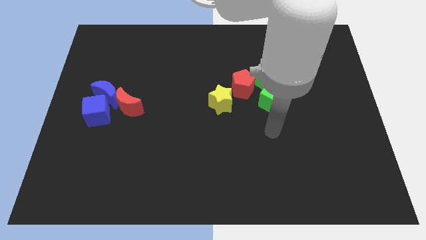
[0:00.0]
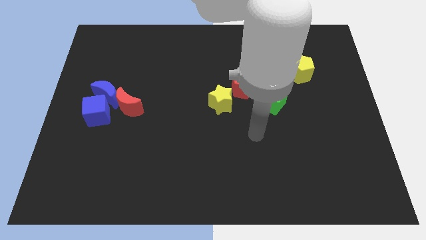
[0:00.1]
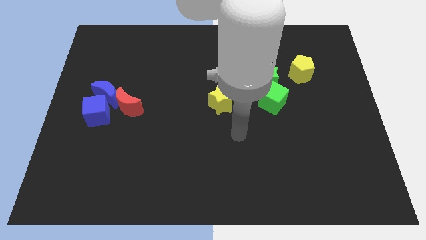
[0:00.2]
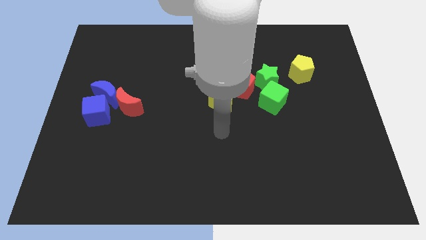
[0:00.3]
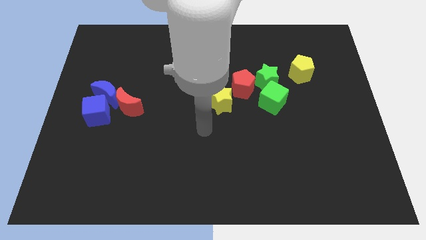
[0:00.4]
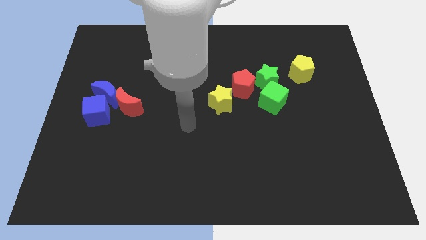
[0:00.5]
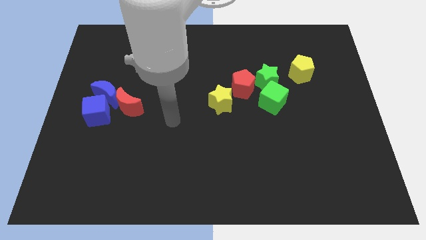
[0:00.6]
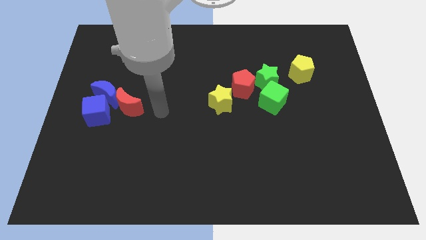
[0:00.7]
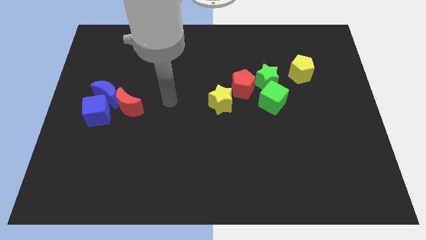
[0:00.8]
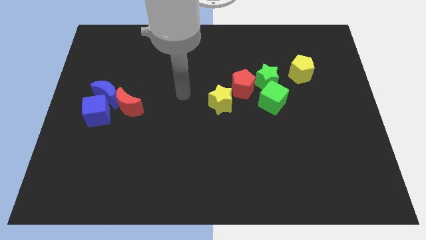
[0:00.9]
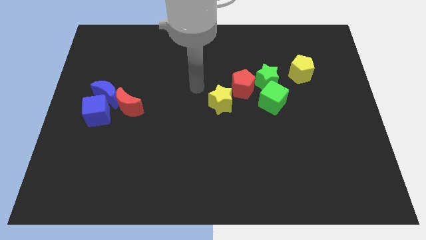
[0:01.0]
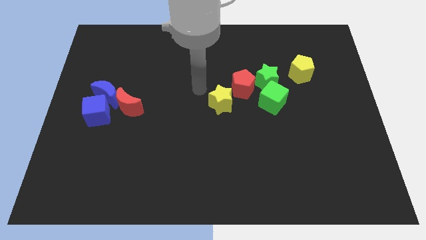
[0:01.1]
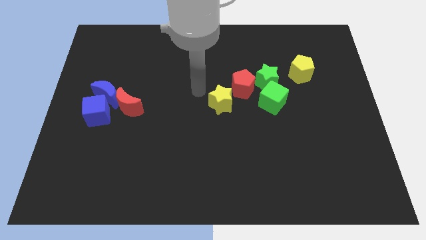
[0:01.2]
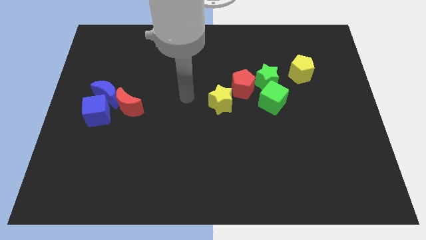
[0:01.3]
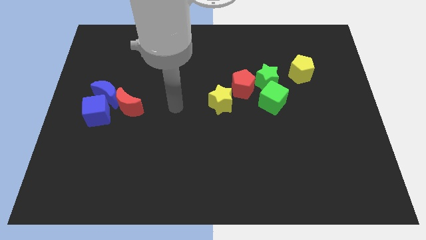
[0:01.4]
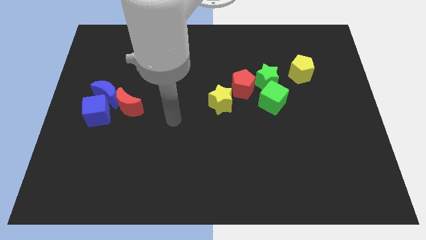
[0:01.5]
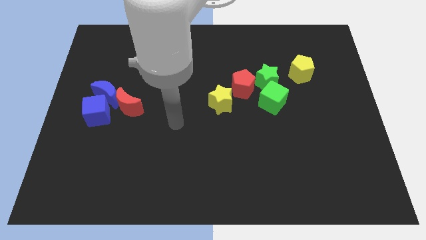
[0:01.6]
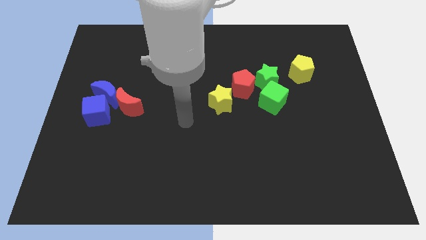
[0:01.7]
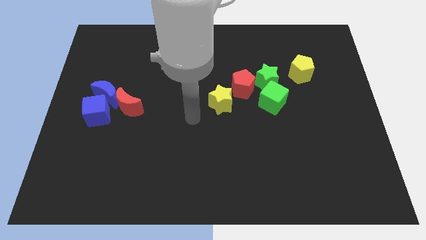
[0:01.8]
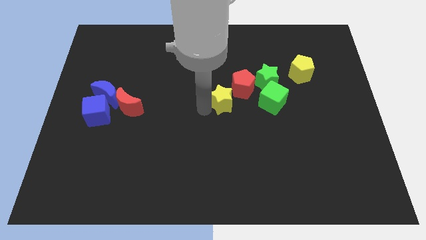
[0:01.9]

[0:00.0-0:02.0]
point the arm to the left of the yellow star

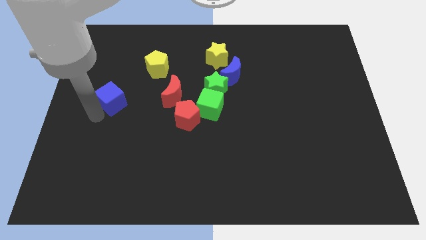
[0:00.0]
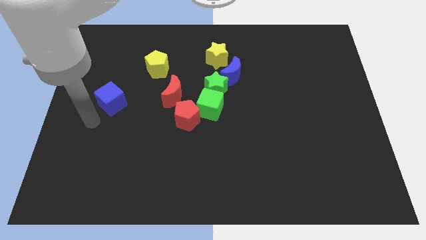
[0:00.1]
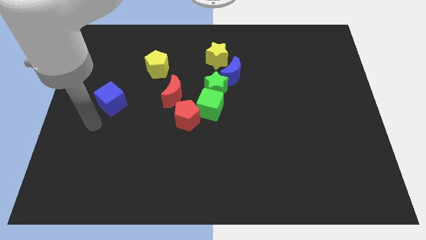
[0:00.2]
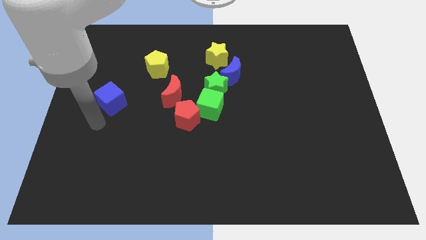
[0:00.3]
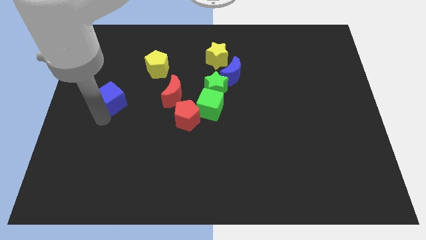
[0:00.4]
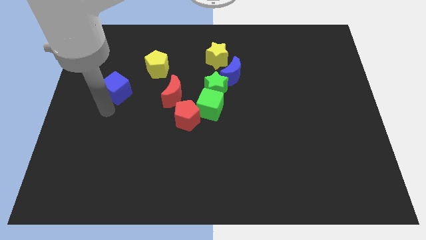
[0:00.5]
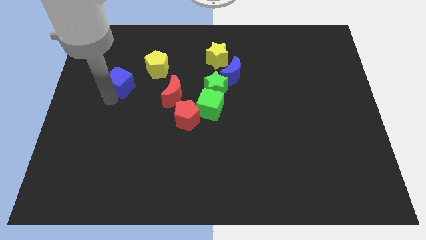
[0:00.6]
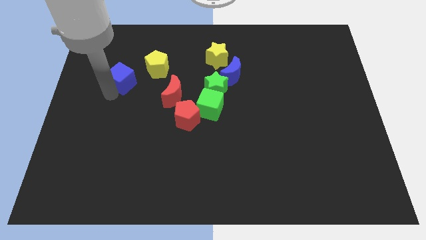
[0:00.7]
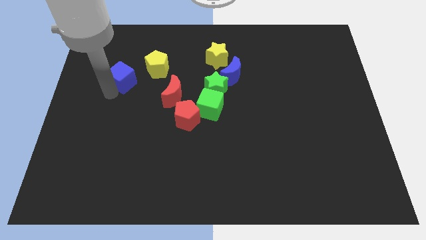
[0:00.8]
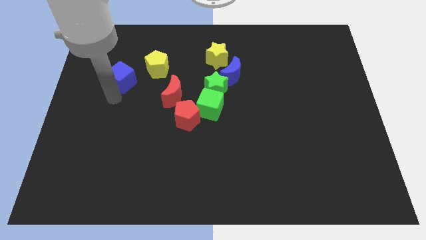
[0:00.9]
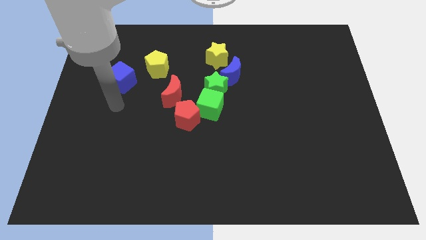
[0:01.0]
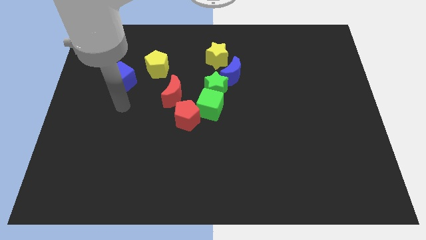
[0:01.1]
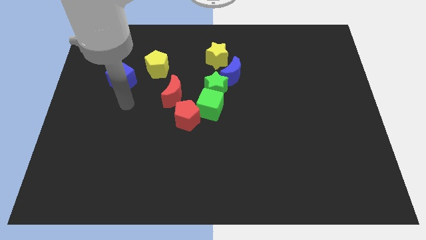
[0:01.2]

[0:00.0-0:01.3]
place the blue cube to the left of yellow pentagon

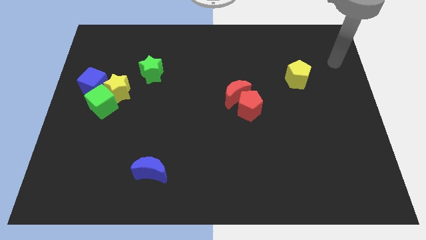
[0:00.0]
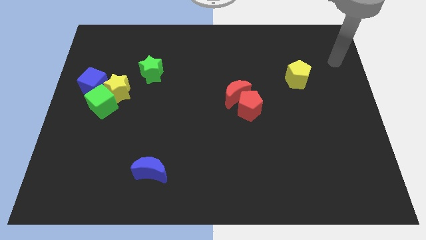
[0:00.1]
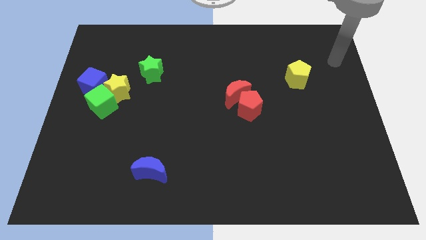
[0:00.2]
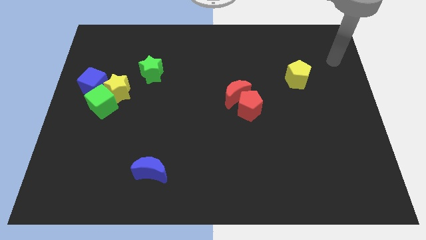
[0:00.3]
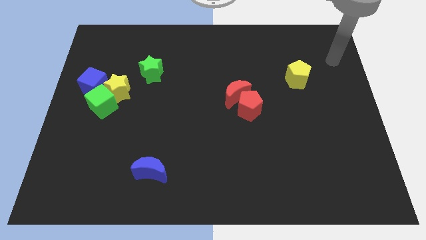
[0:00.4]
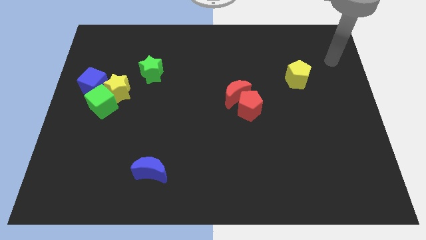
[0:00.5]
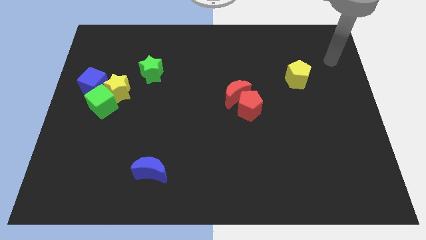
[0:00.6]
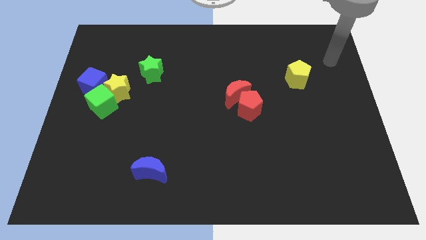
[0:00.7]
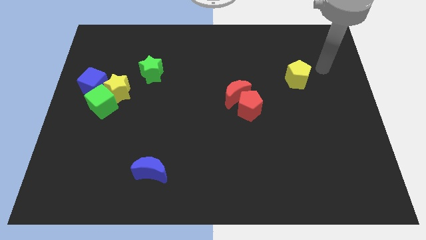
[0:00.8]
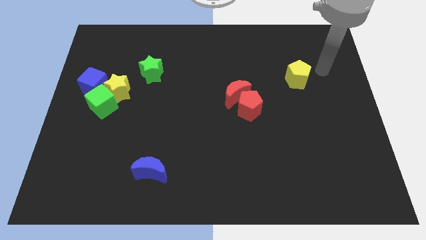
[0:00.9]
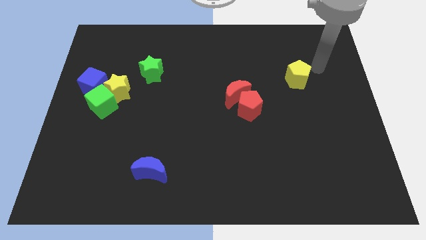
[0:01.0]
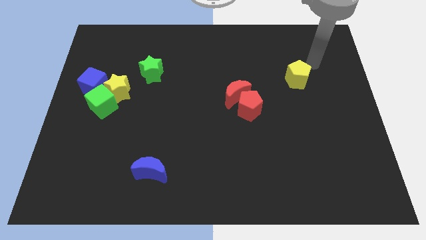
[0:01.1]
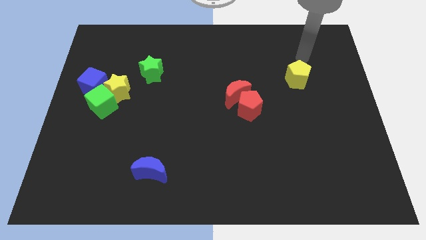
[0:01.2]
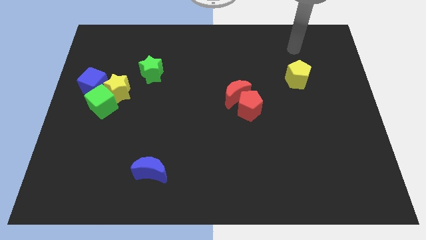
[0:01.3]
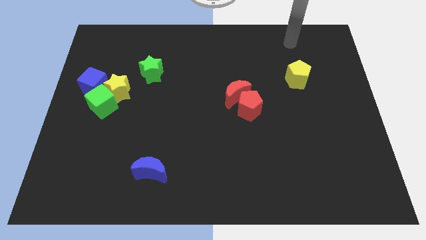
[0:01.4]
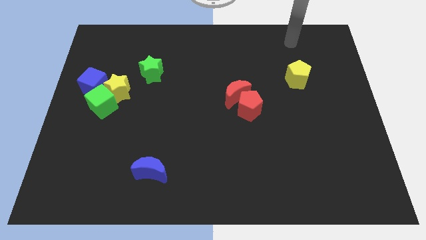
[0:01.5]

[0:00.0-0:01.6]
push your hand above the yellow pentagon

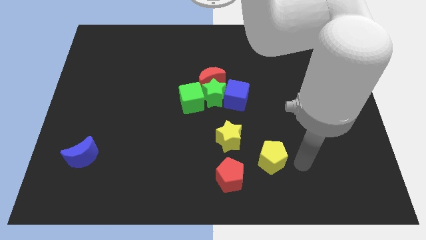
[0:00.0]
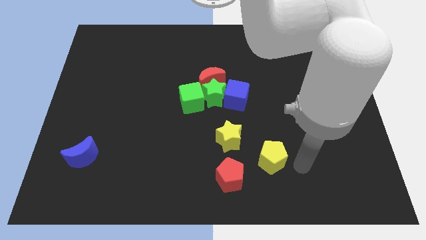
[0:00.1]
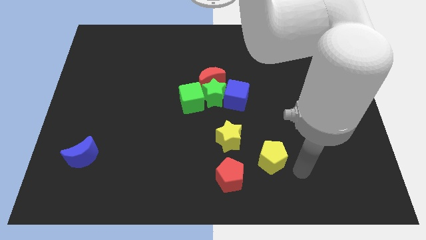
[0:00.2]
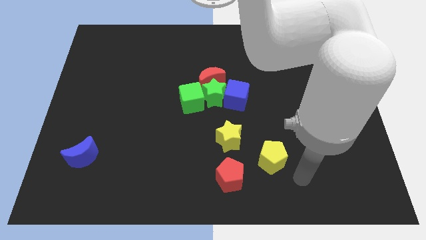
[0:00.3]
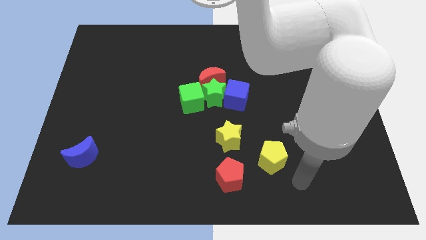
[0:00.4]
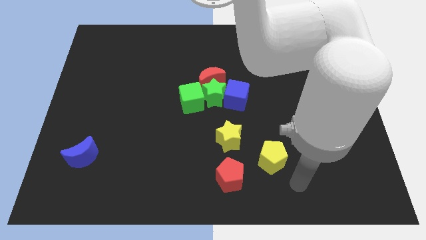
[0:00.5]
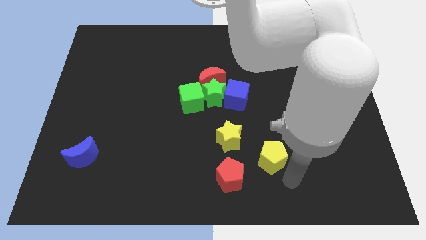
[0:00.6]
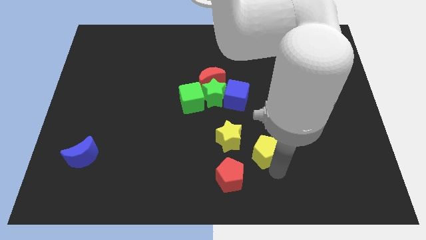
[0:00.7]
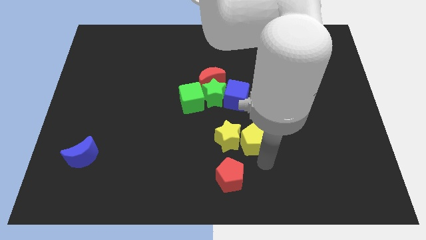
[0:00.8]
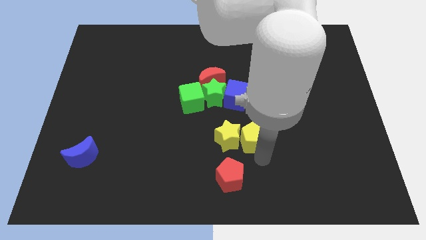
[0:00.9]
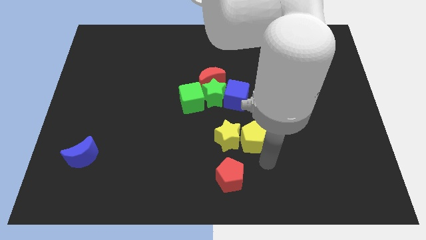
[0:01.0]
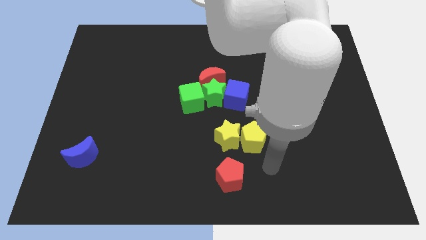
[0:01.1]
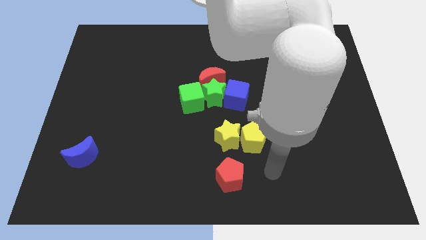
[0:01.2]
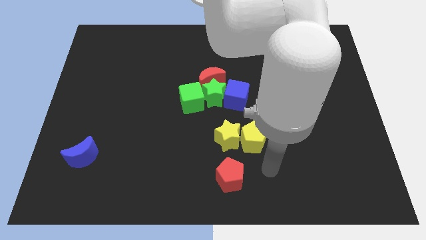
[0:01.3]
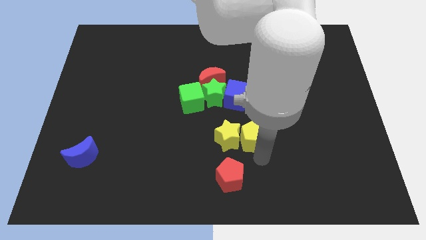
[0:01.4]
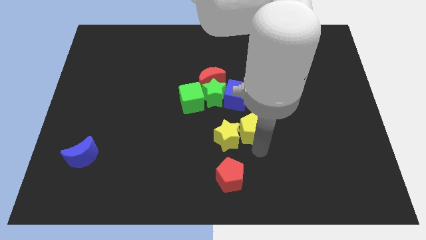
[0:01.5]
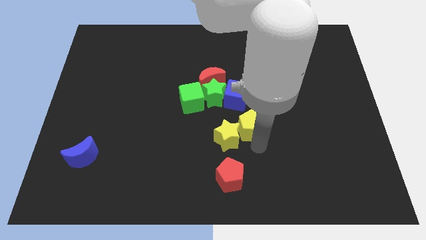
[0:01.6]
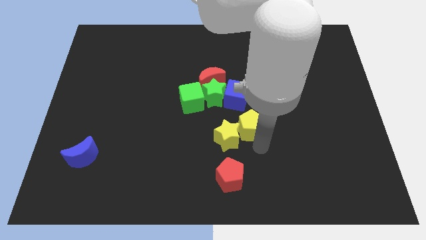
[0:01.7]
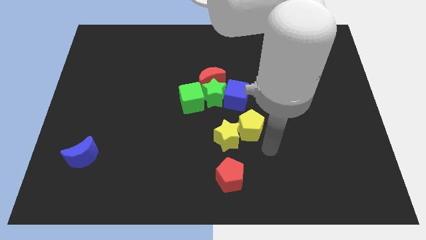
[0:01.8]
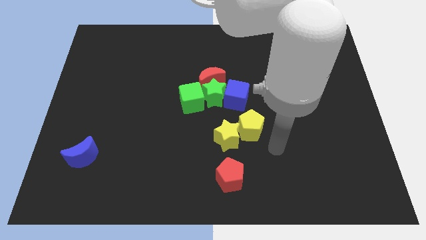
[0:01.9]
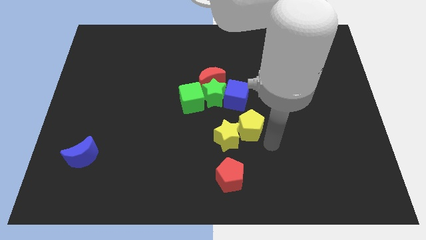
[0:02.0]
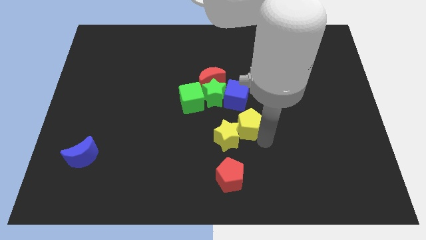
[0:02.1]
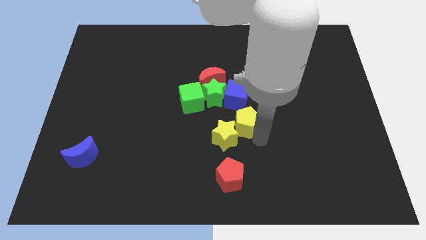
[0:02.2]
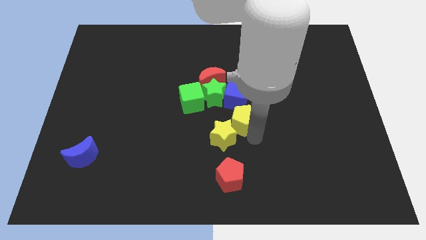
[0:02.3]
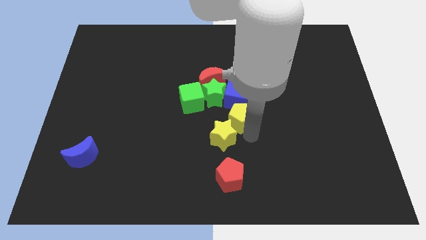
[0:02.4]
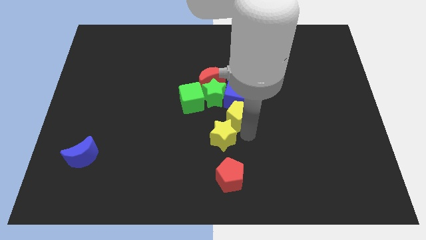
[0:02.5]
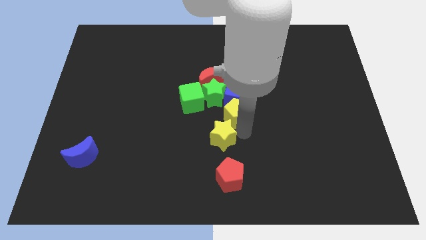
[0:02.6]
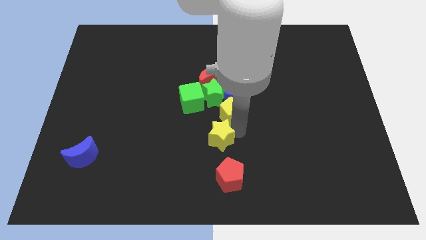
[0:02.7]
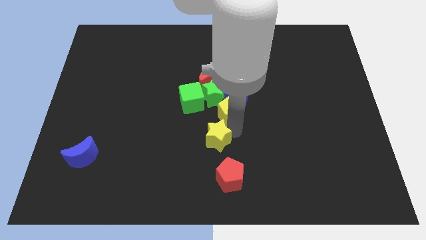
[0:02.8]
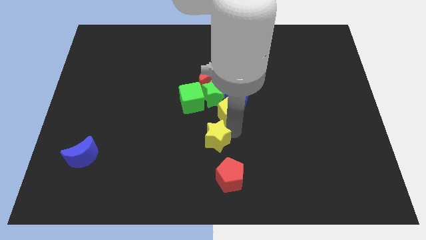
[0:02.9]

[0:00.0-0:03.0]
place the yellow pentagon diagonal to the yellow star

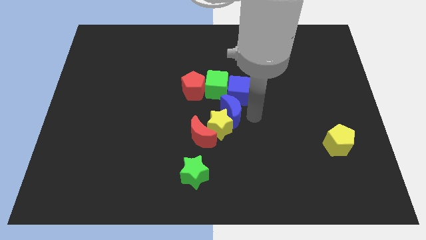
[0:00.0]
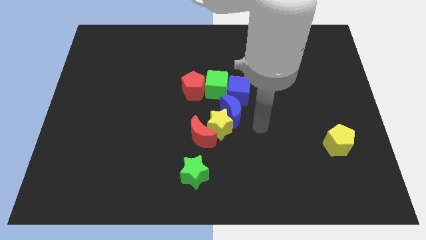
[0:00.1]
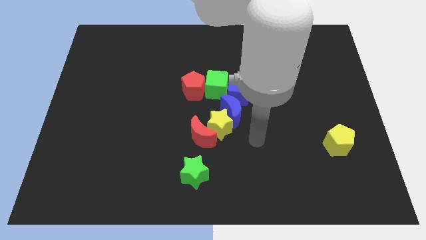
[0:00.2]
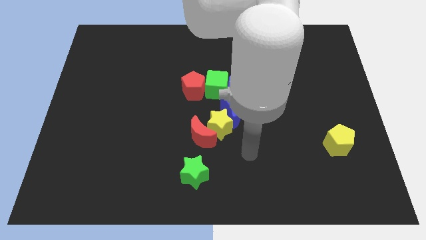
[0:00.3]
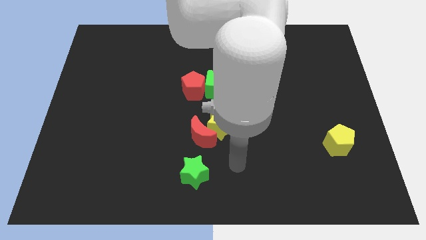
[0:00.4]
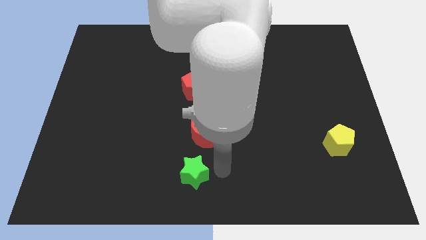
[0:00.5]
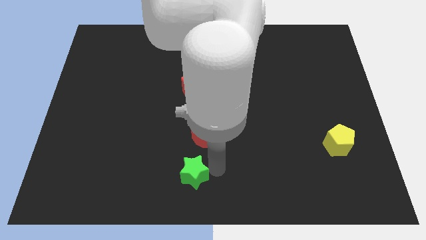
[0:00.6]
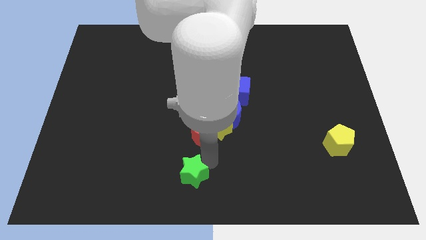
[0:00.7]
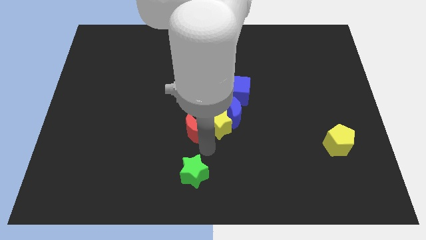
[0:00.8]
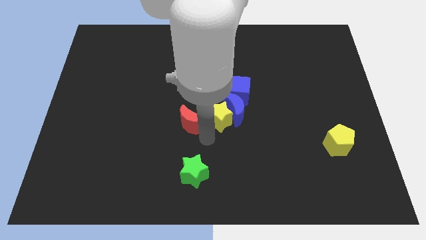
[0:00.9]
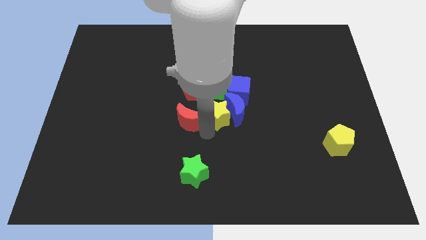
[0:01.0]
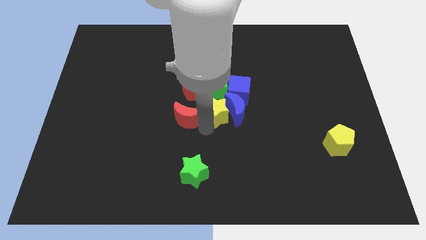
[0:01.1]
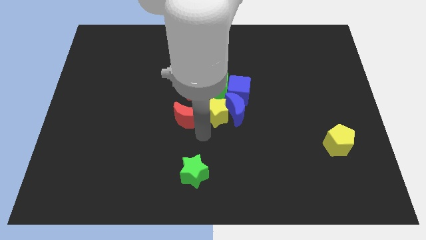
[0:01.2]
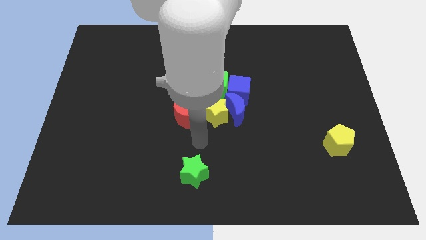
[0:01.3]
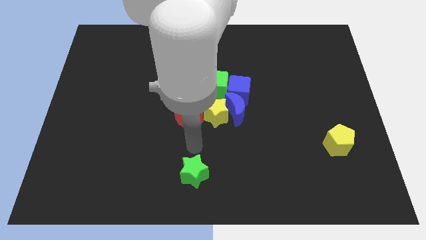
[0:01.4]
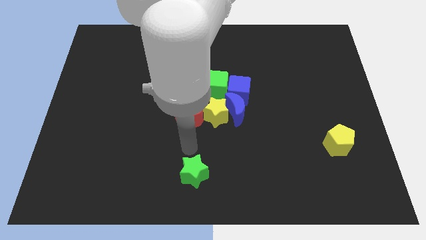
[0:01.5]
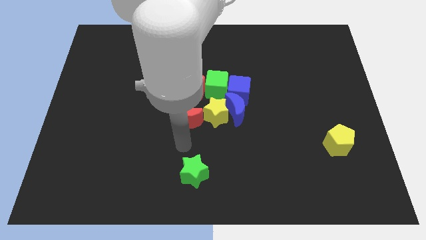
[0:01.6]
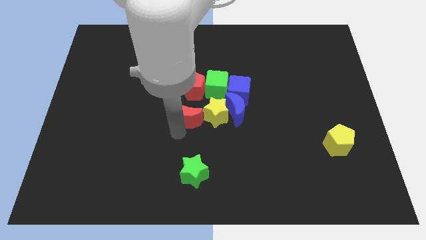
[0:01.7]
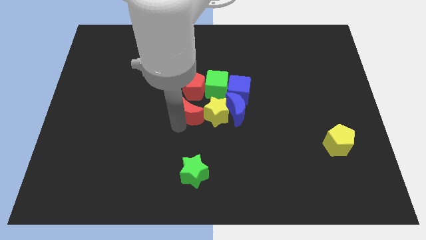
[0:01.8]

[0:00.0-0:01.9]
move yellow star below the green cube
